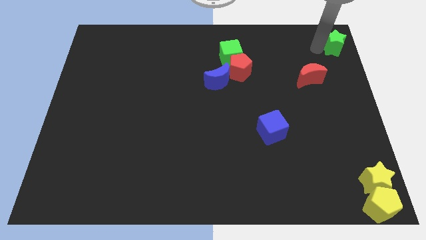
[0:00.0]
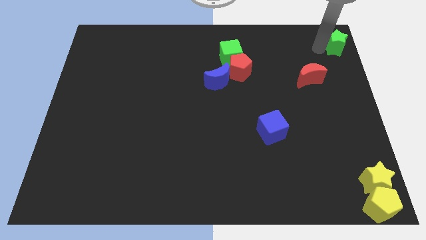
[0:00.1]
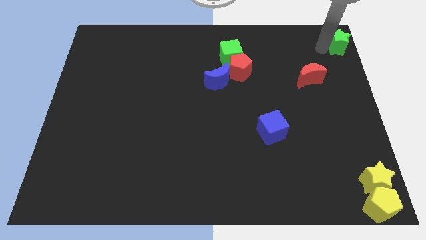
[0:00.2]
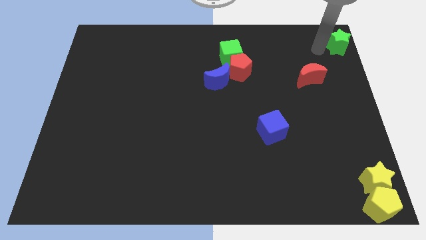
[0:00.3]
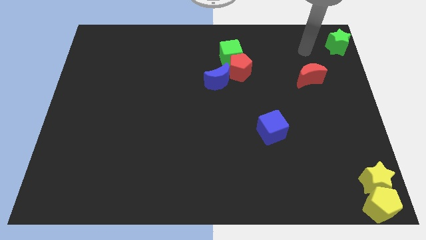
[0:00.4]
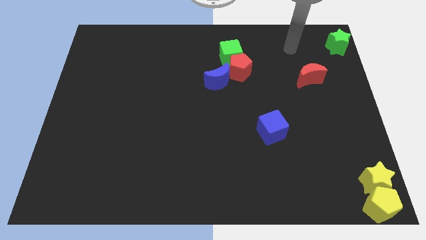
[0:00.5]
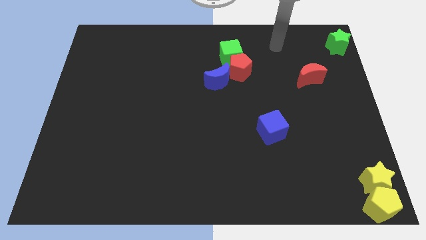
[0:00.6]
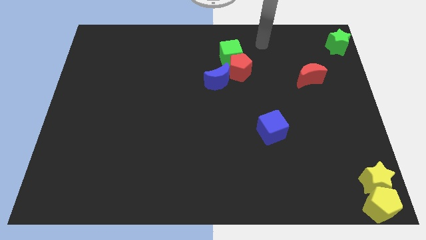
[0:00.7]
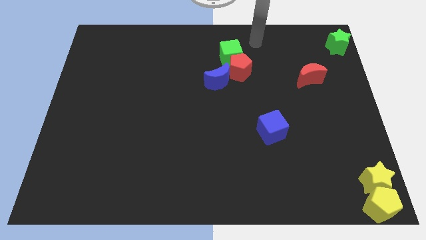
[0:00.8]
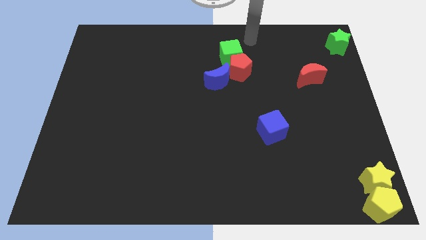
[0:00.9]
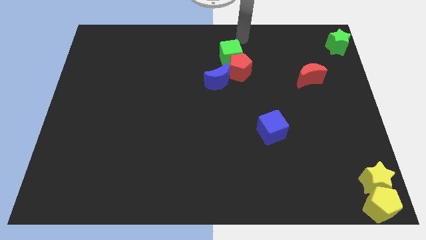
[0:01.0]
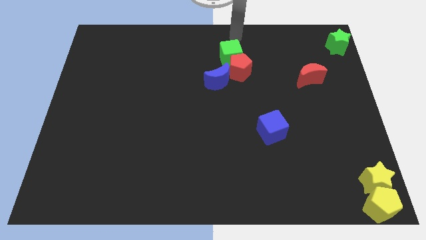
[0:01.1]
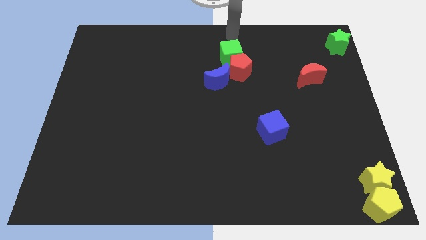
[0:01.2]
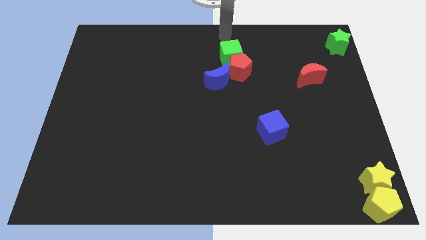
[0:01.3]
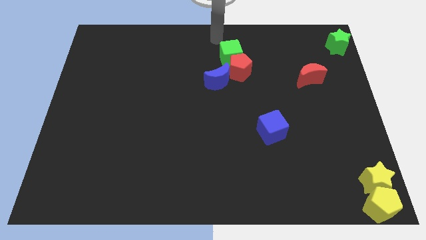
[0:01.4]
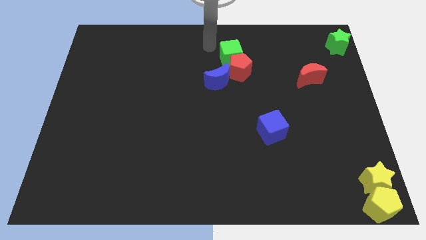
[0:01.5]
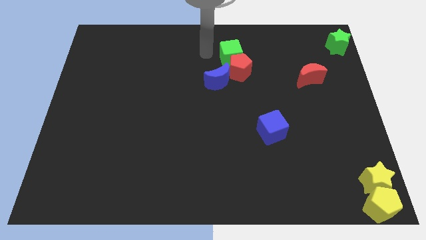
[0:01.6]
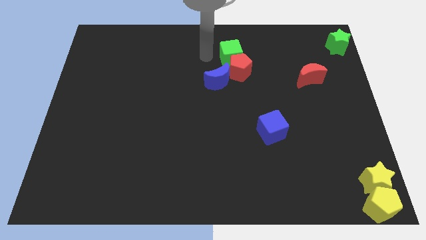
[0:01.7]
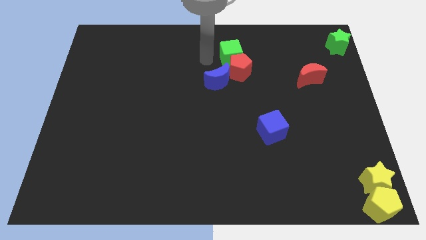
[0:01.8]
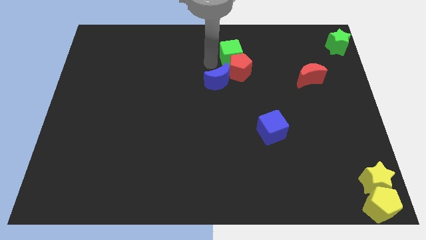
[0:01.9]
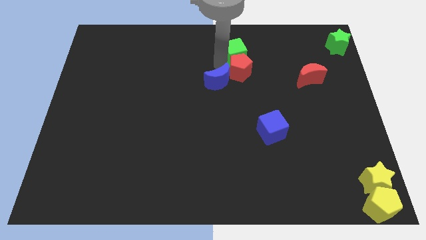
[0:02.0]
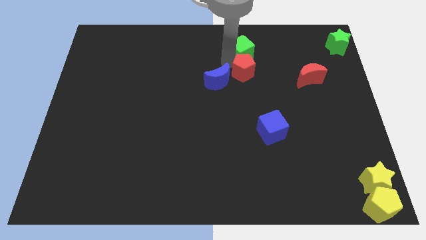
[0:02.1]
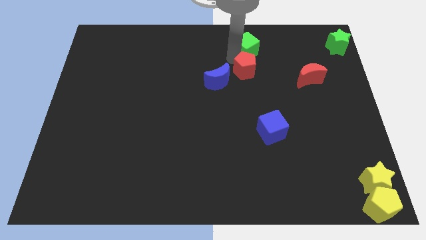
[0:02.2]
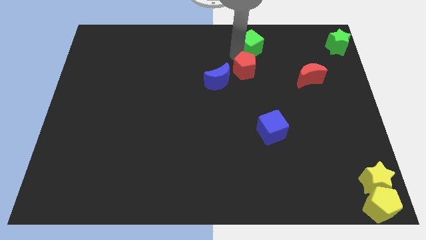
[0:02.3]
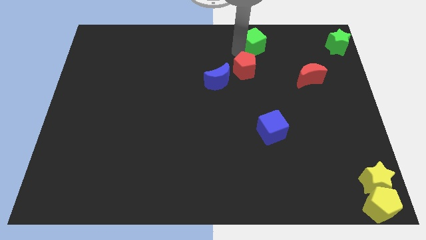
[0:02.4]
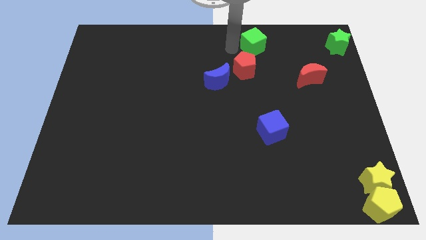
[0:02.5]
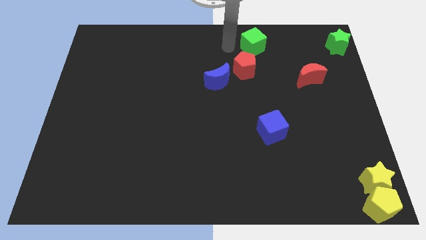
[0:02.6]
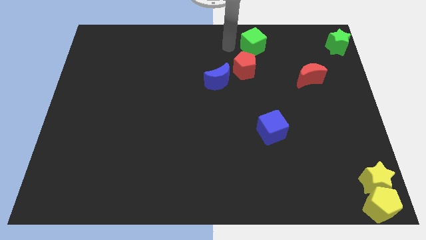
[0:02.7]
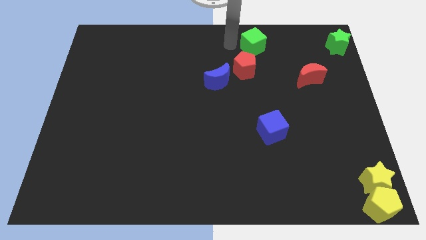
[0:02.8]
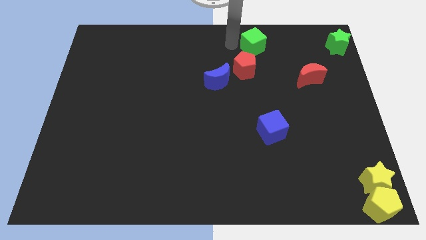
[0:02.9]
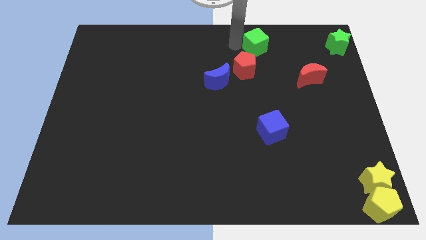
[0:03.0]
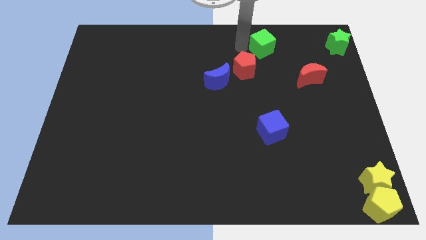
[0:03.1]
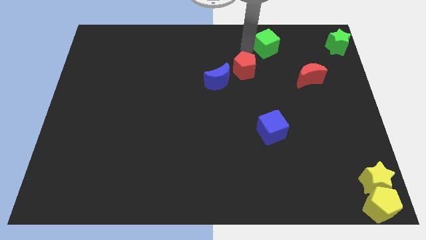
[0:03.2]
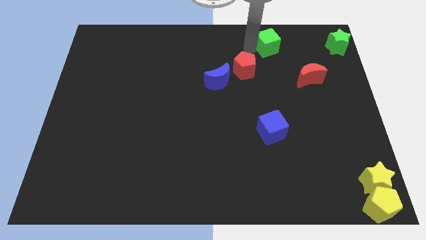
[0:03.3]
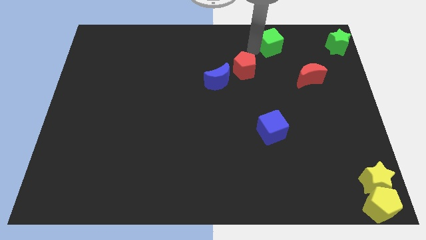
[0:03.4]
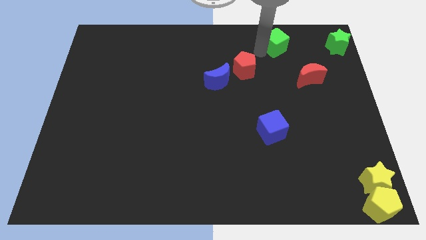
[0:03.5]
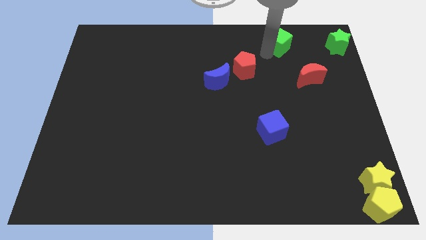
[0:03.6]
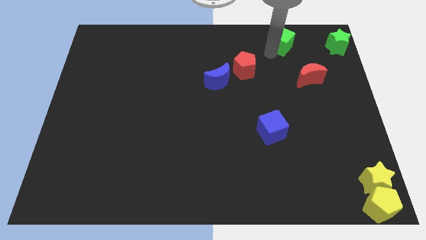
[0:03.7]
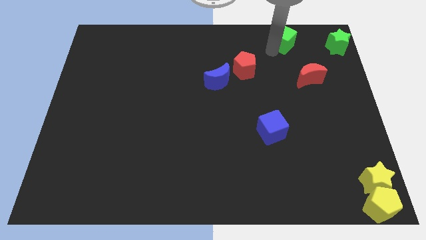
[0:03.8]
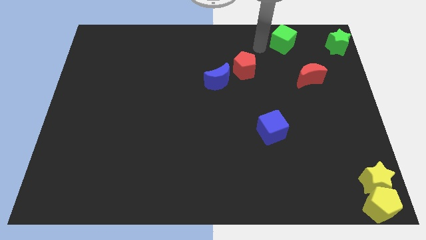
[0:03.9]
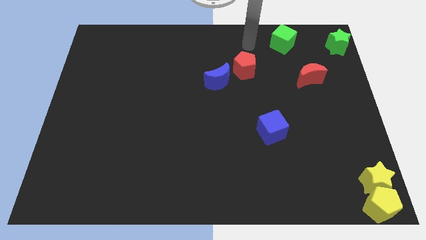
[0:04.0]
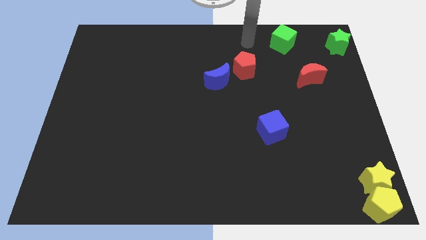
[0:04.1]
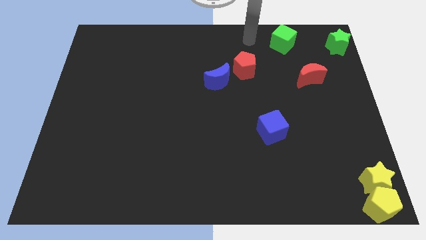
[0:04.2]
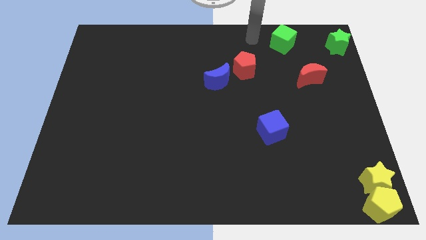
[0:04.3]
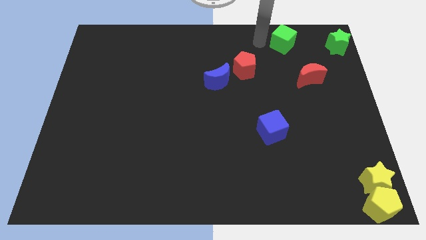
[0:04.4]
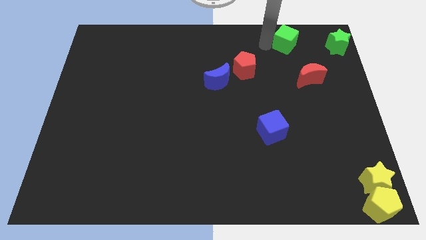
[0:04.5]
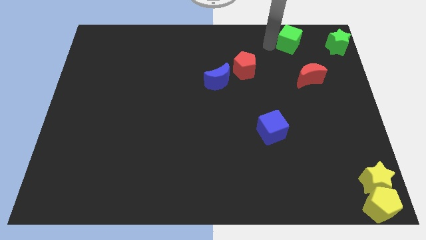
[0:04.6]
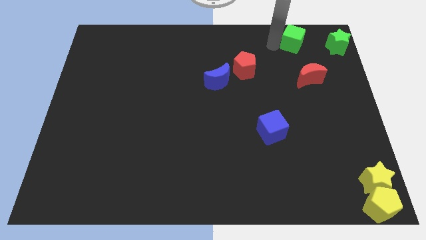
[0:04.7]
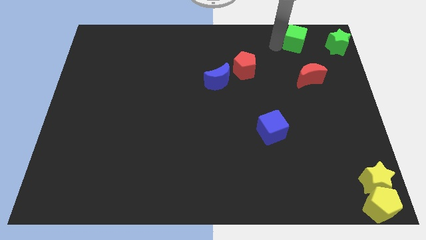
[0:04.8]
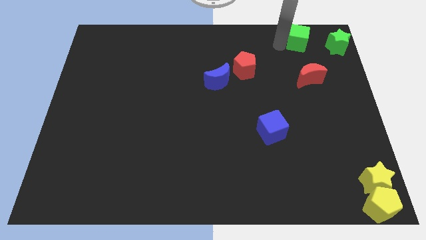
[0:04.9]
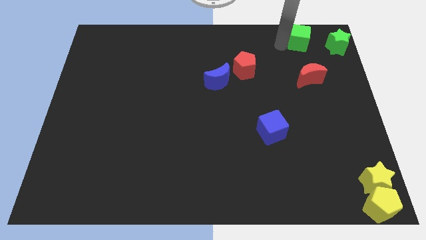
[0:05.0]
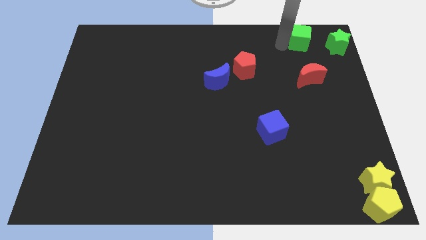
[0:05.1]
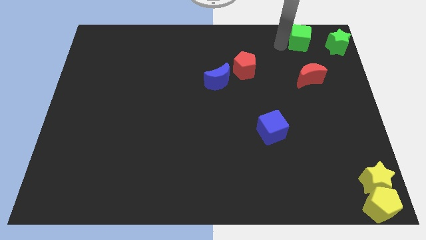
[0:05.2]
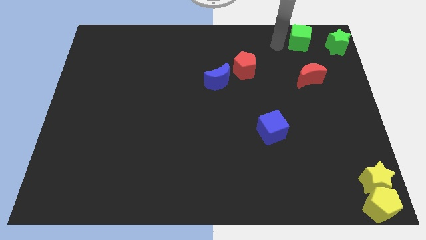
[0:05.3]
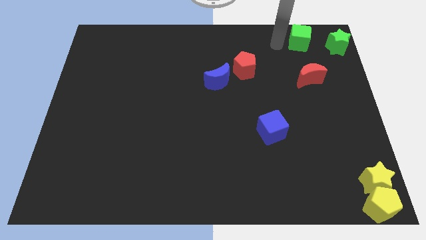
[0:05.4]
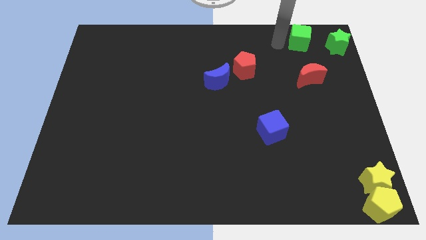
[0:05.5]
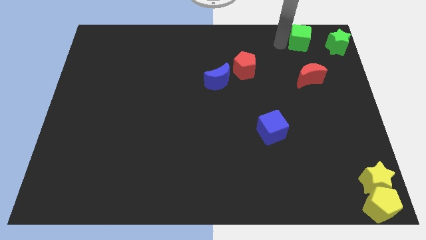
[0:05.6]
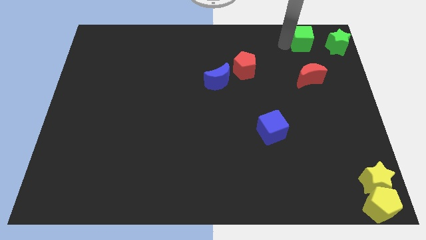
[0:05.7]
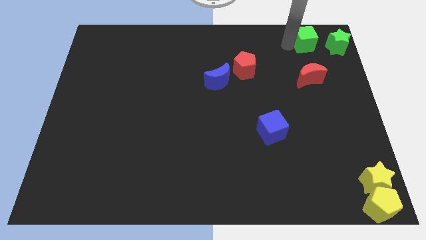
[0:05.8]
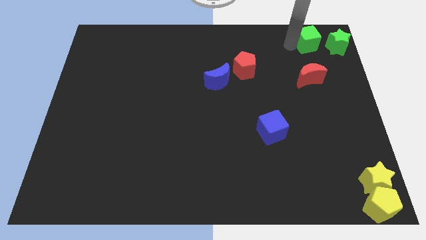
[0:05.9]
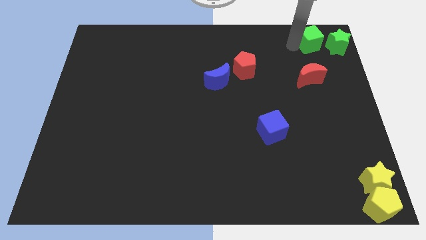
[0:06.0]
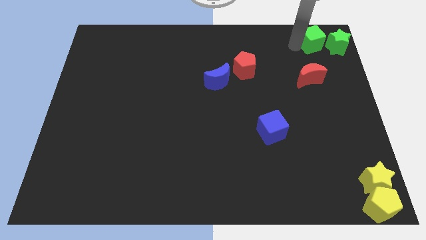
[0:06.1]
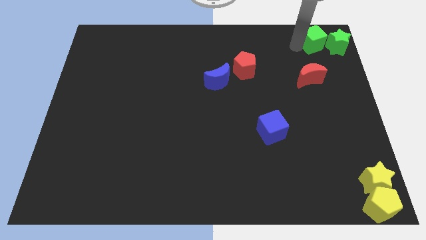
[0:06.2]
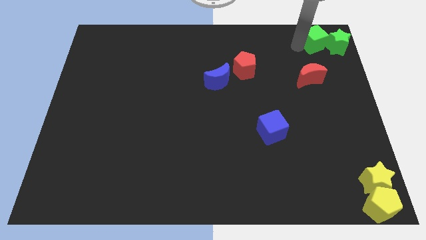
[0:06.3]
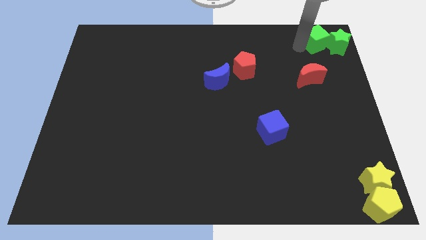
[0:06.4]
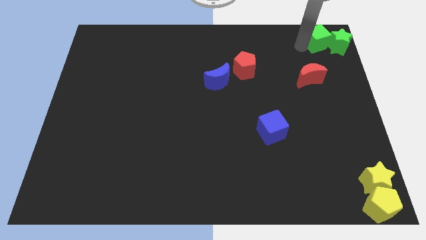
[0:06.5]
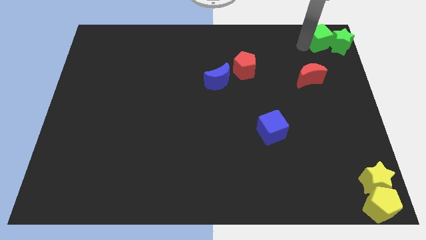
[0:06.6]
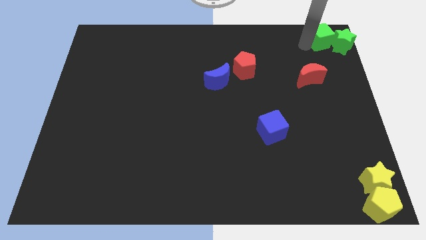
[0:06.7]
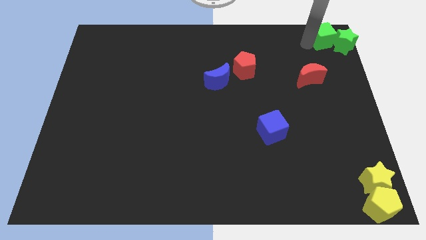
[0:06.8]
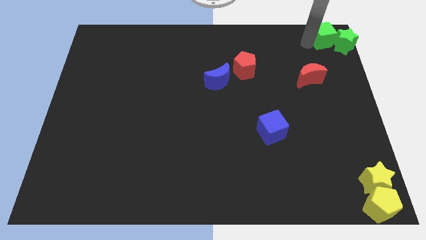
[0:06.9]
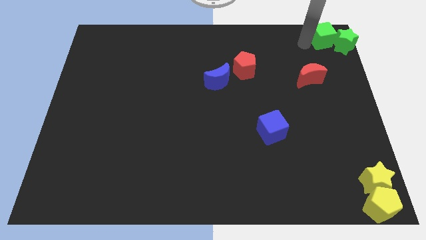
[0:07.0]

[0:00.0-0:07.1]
push the green cube into the green star

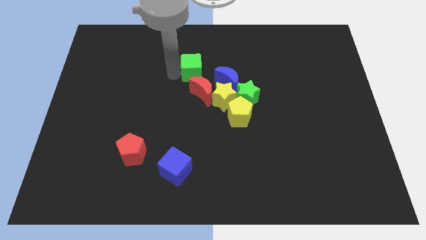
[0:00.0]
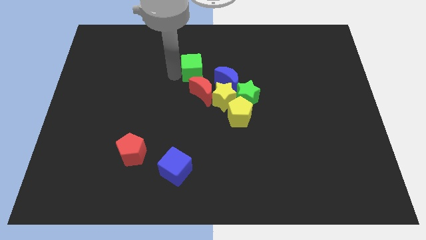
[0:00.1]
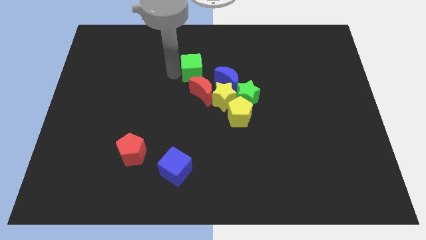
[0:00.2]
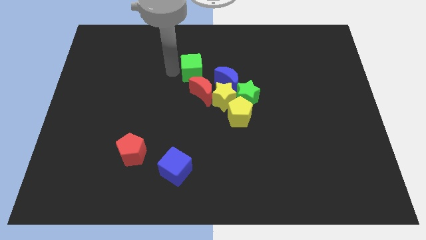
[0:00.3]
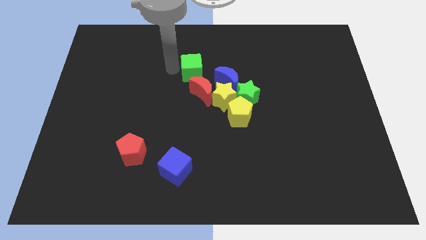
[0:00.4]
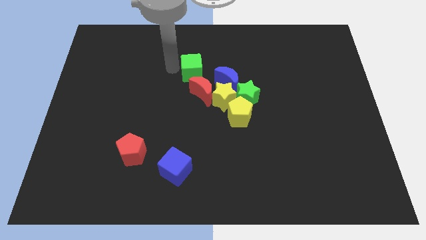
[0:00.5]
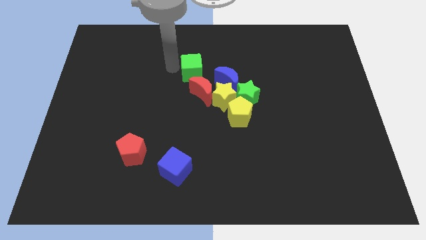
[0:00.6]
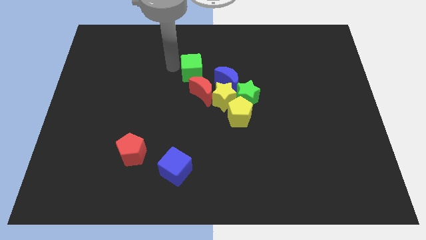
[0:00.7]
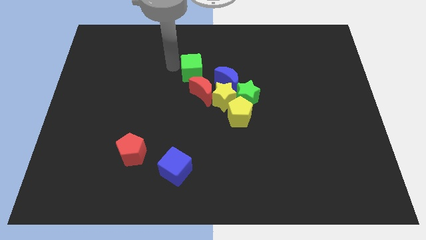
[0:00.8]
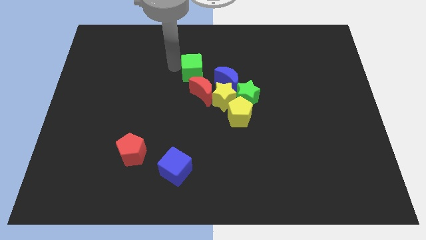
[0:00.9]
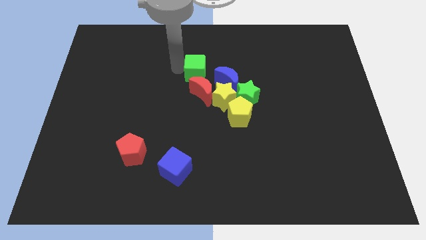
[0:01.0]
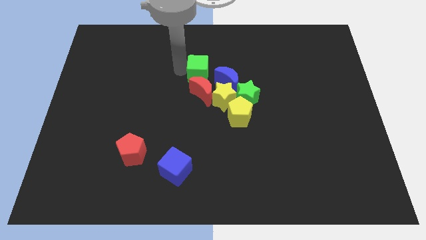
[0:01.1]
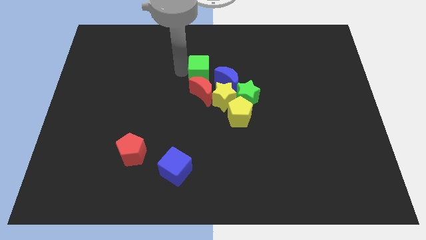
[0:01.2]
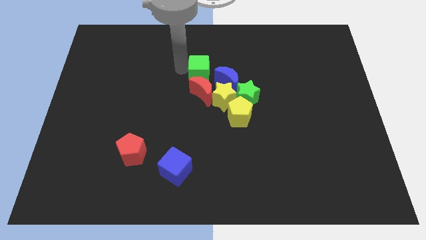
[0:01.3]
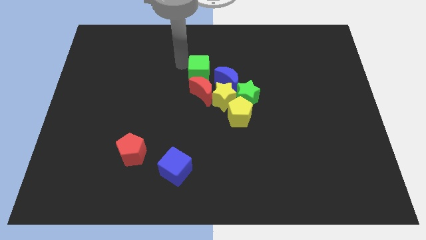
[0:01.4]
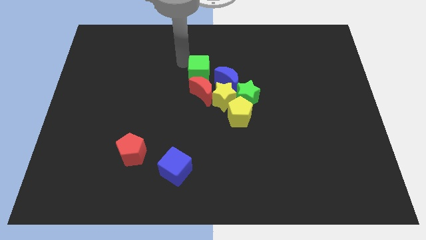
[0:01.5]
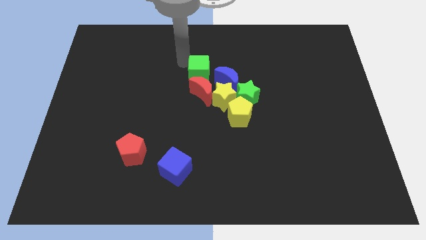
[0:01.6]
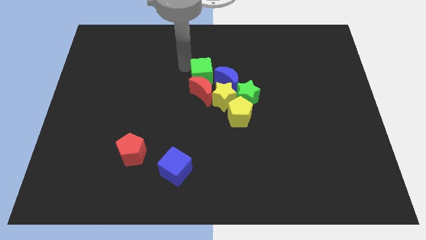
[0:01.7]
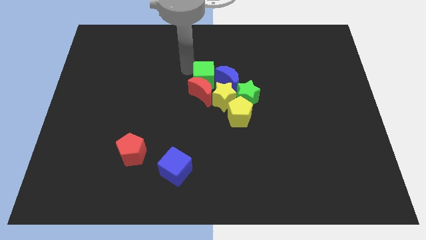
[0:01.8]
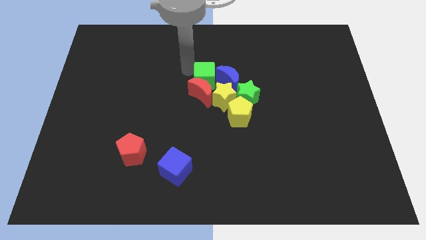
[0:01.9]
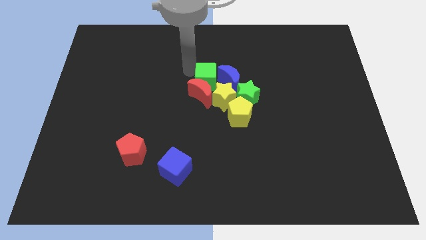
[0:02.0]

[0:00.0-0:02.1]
move the green cube in between the red crescent and blue crescent

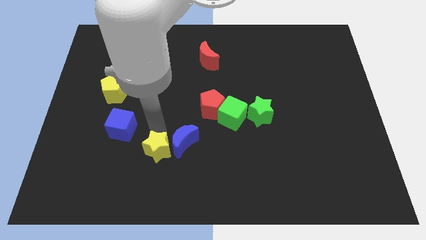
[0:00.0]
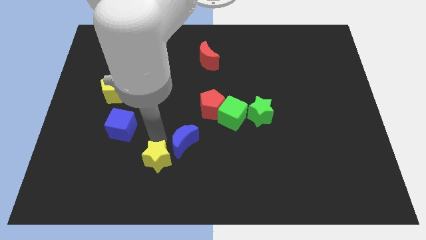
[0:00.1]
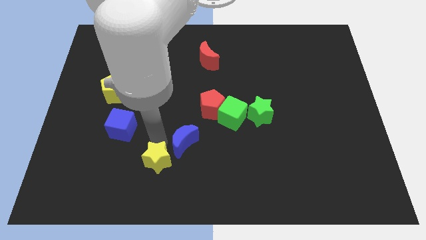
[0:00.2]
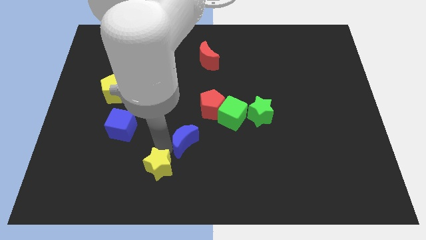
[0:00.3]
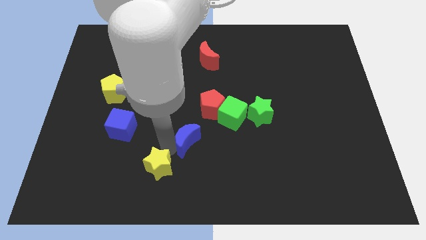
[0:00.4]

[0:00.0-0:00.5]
slightly push the yellow star towards the bottom of the board
